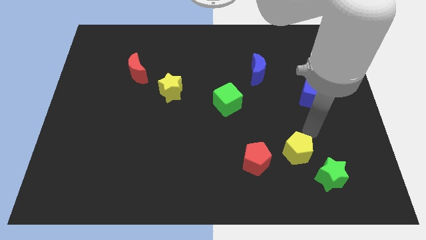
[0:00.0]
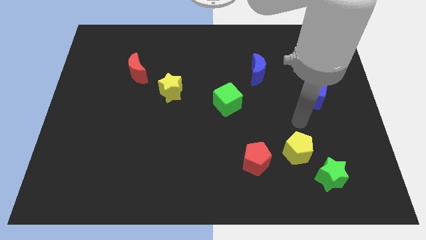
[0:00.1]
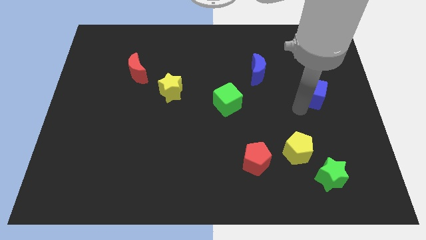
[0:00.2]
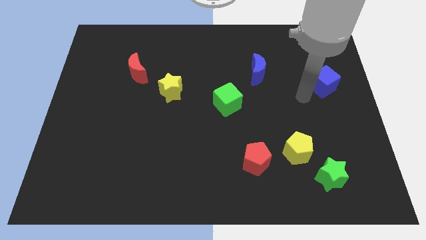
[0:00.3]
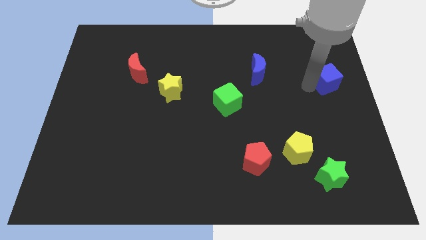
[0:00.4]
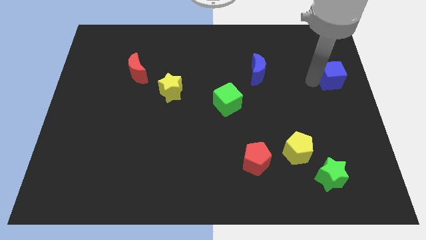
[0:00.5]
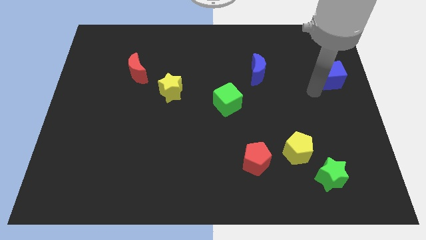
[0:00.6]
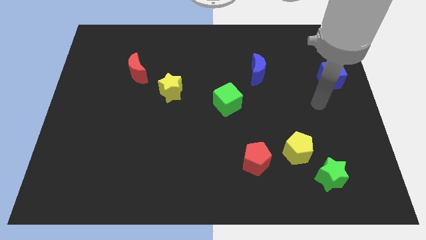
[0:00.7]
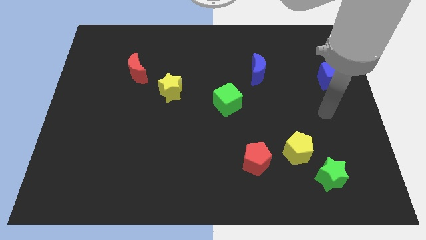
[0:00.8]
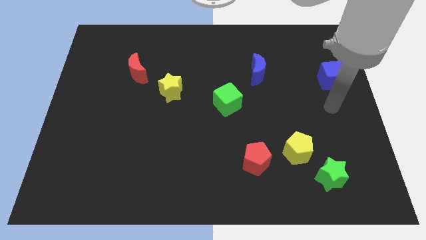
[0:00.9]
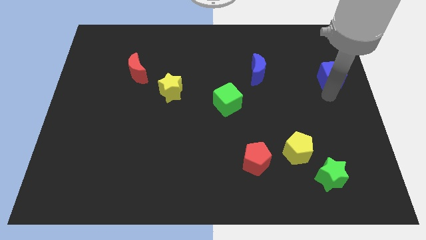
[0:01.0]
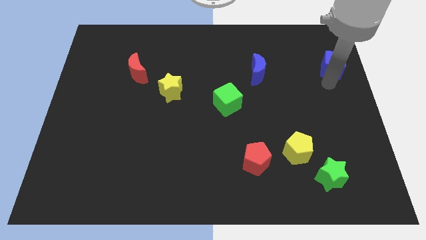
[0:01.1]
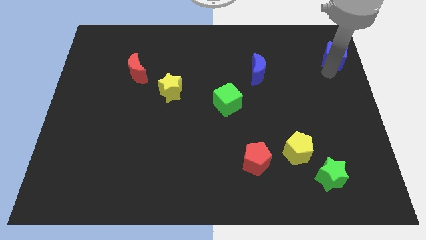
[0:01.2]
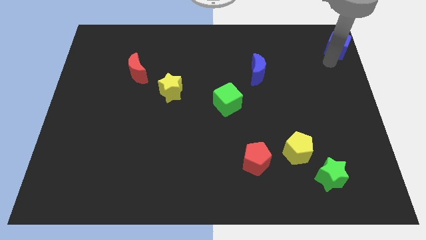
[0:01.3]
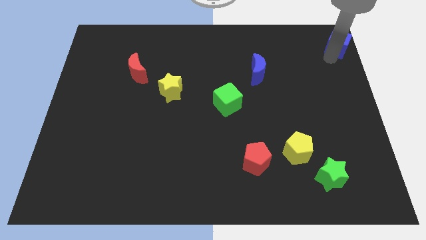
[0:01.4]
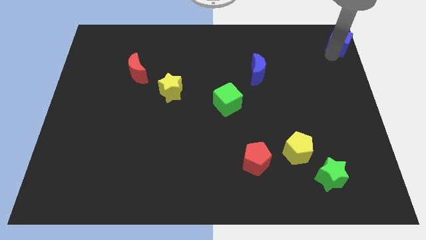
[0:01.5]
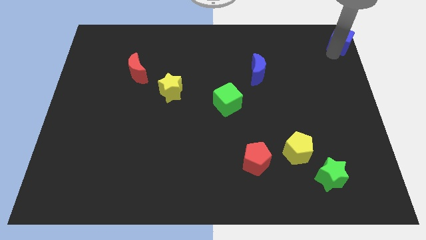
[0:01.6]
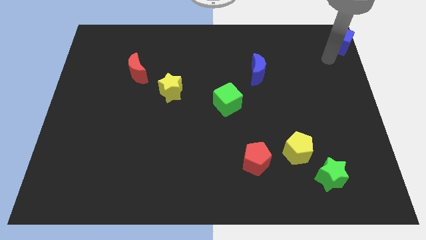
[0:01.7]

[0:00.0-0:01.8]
move the blue cube to the top right of the board

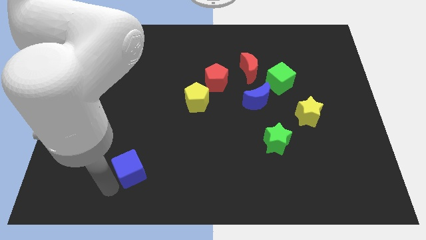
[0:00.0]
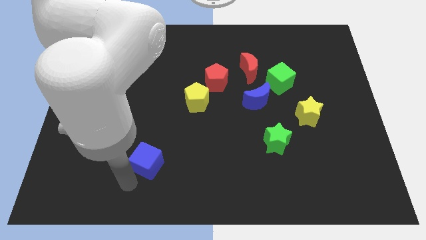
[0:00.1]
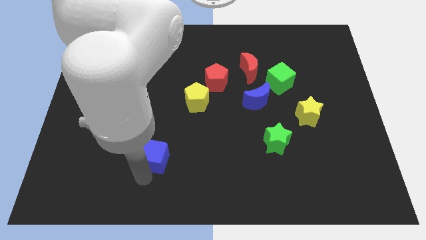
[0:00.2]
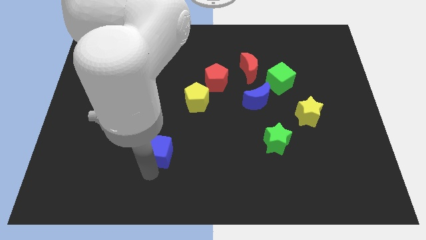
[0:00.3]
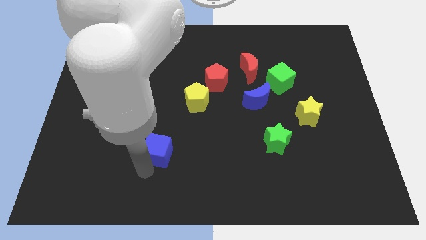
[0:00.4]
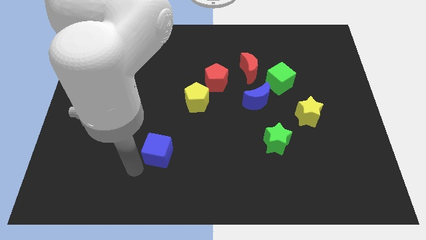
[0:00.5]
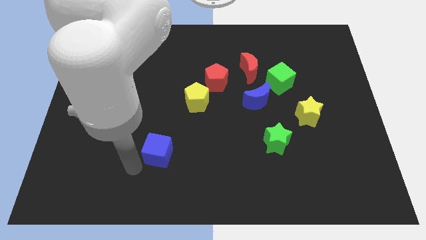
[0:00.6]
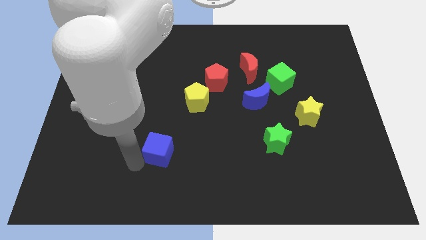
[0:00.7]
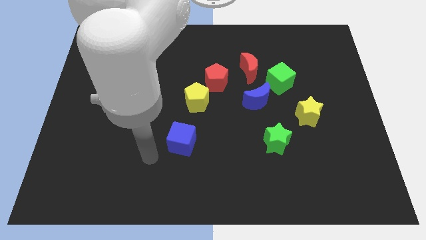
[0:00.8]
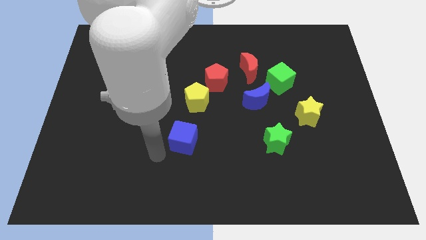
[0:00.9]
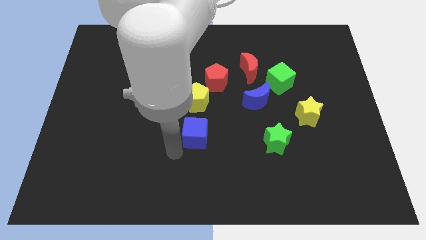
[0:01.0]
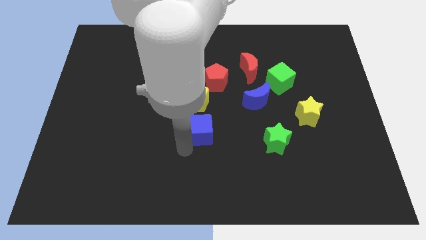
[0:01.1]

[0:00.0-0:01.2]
place the blue cube below the yellow pentagon

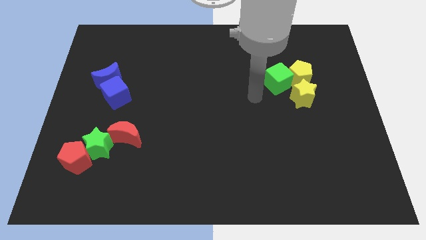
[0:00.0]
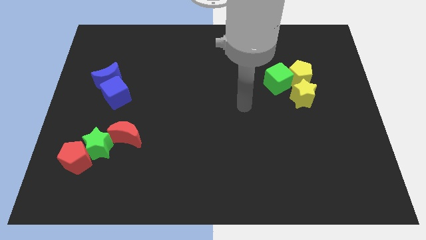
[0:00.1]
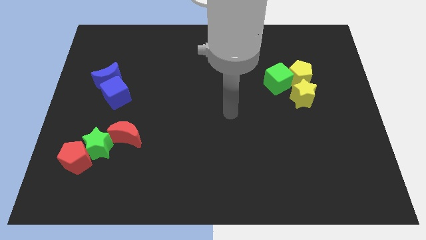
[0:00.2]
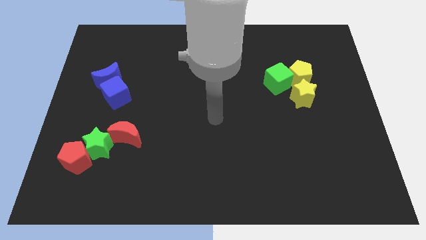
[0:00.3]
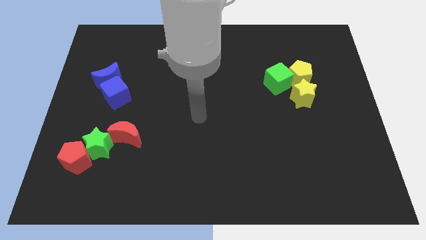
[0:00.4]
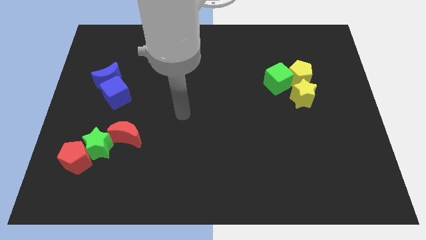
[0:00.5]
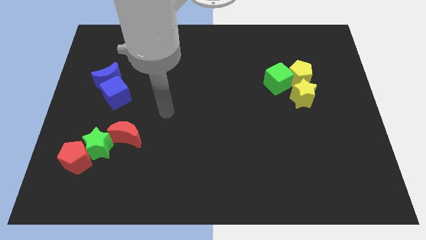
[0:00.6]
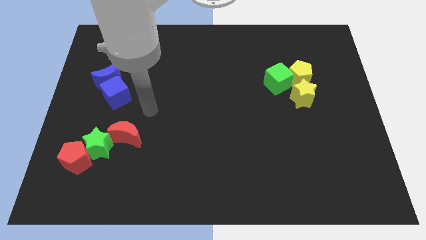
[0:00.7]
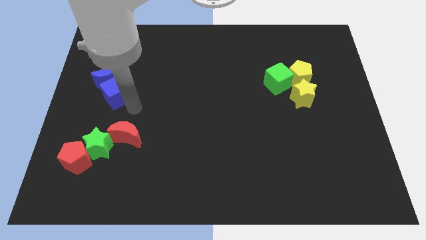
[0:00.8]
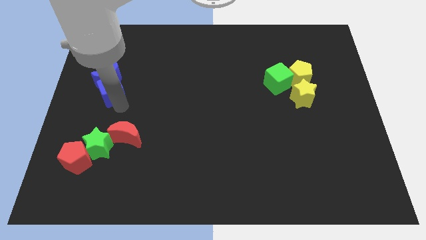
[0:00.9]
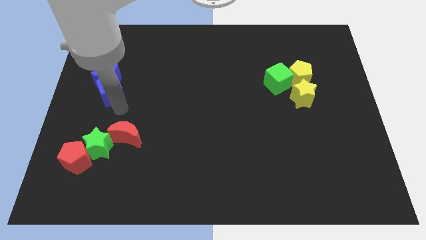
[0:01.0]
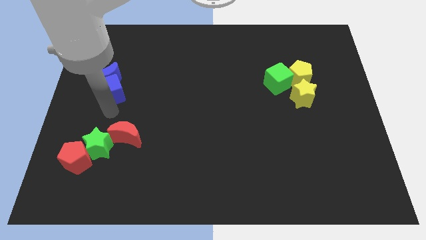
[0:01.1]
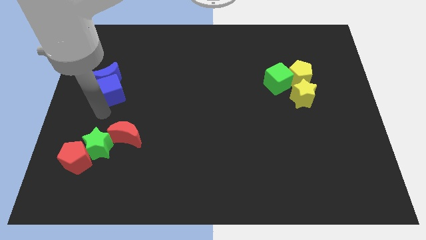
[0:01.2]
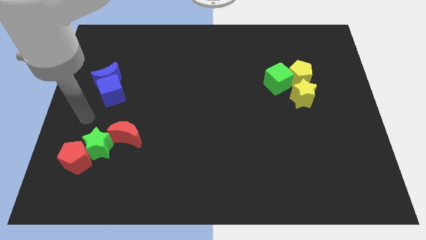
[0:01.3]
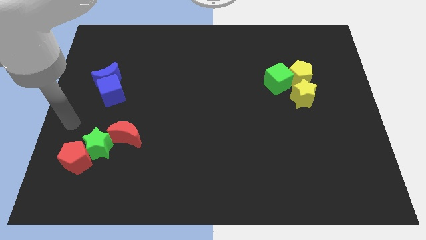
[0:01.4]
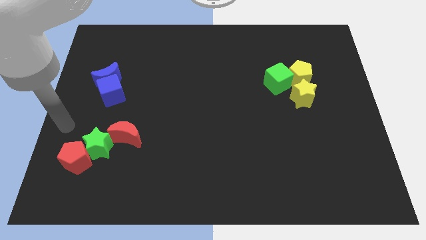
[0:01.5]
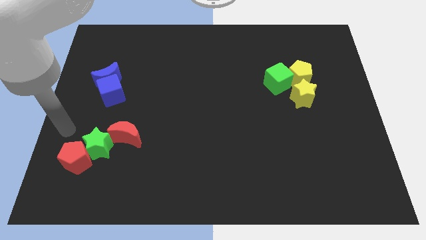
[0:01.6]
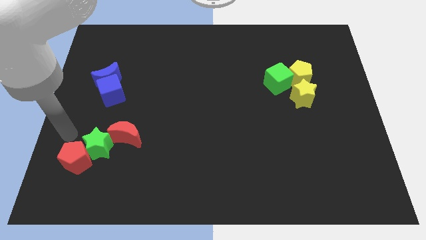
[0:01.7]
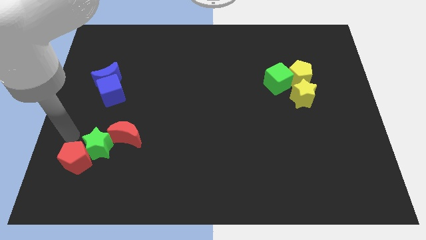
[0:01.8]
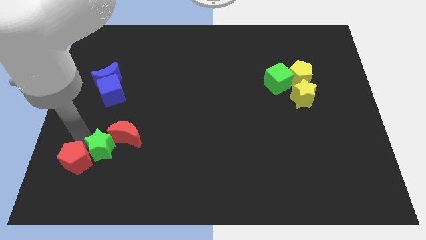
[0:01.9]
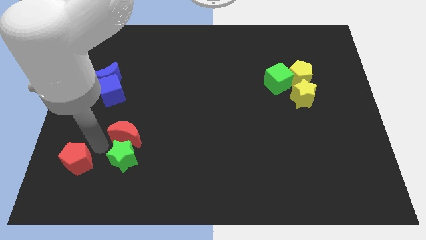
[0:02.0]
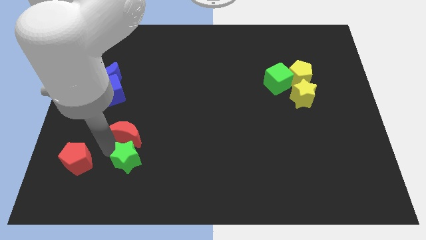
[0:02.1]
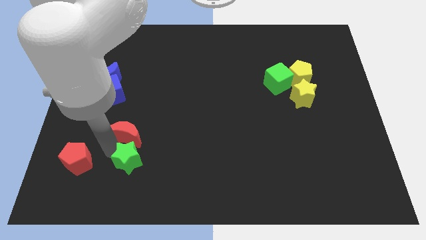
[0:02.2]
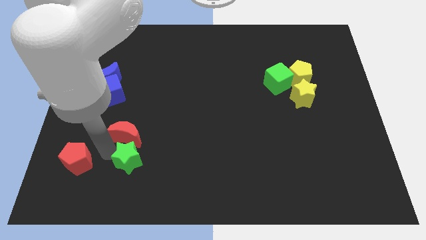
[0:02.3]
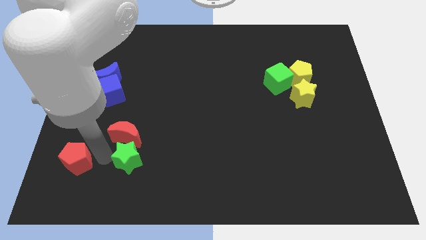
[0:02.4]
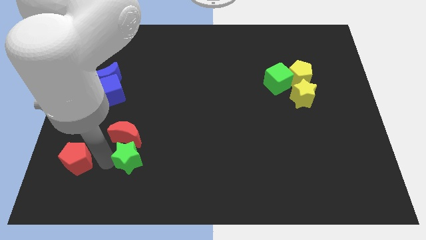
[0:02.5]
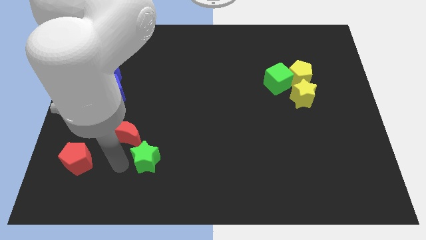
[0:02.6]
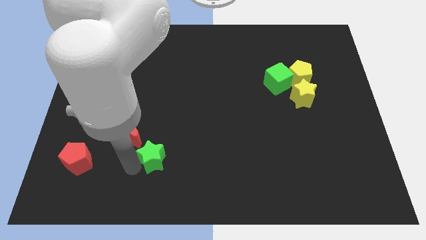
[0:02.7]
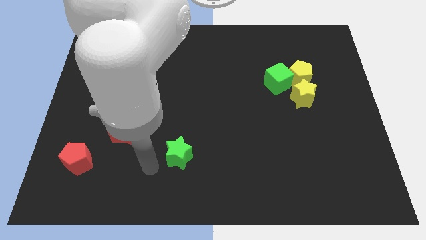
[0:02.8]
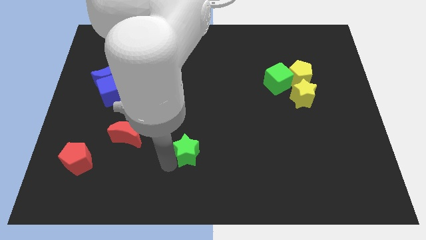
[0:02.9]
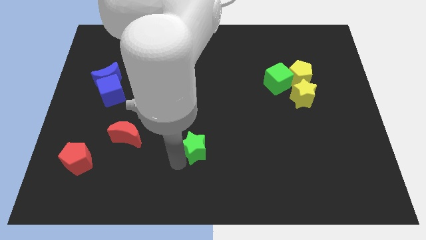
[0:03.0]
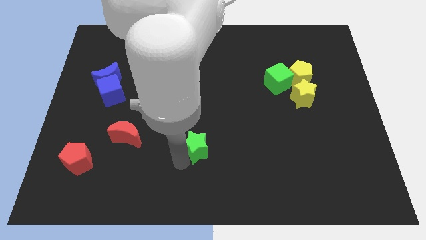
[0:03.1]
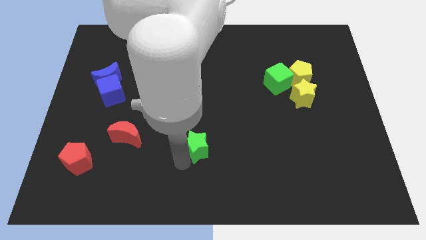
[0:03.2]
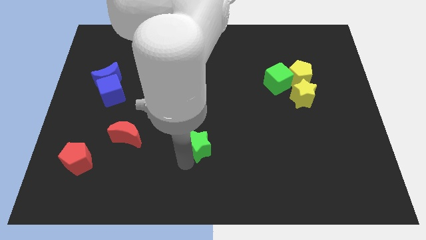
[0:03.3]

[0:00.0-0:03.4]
separate the green star from the red blocks

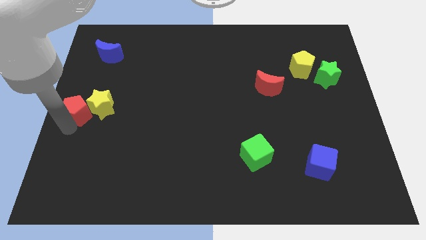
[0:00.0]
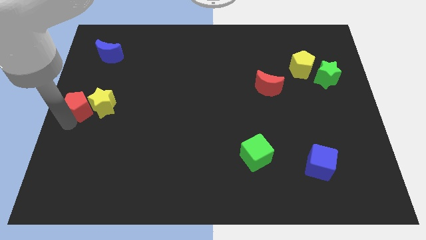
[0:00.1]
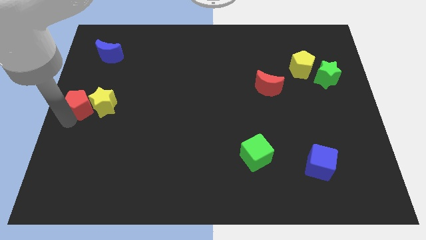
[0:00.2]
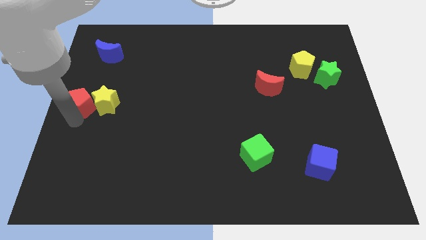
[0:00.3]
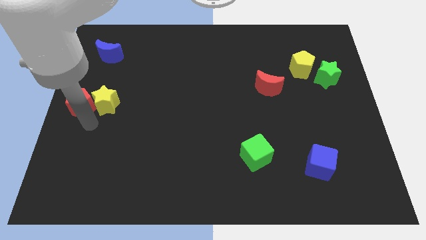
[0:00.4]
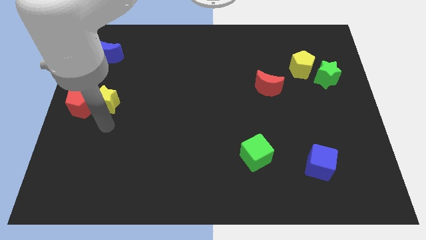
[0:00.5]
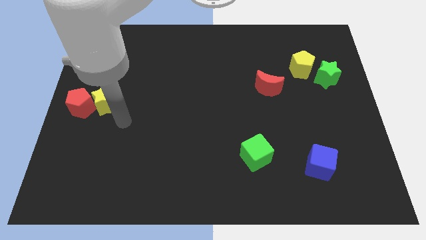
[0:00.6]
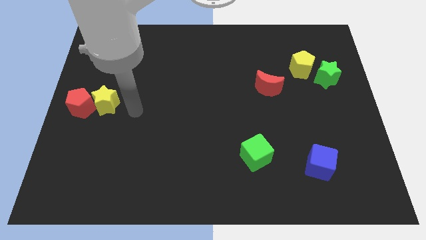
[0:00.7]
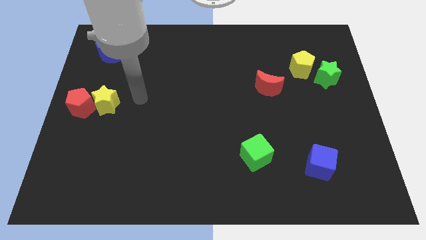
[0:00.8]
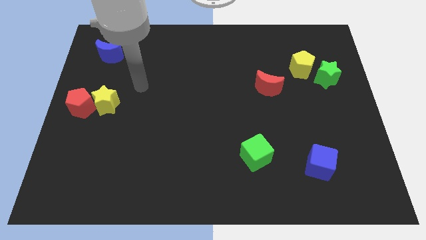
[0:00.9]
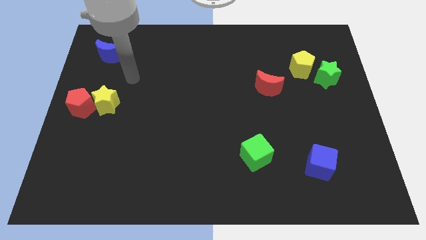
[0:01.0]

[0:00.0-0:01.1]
place the red pentagon to the left side of yellow star

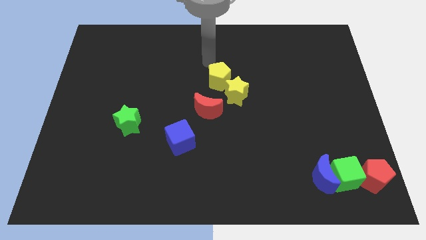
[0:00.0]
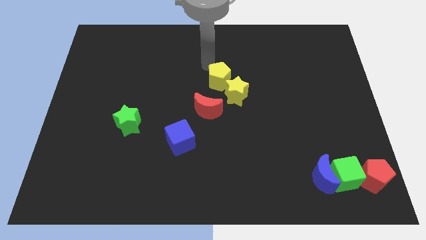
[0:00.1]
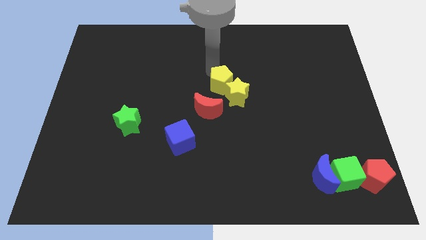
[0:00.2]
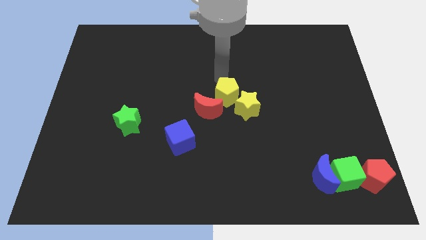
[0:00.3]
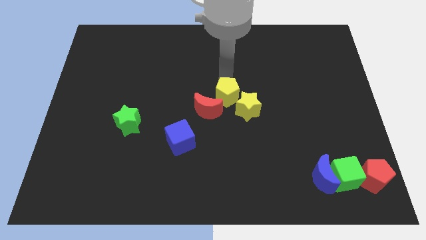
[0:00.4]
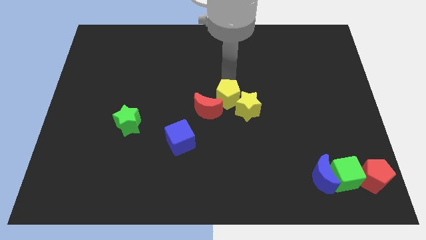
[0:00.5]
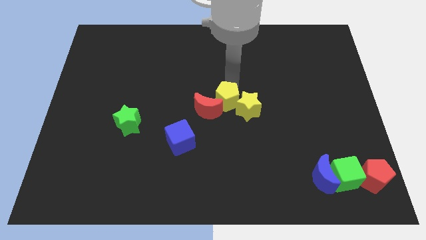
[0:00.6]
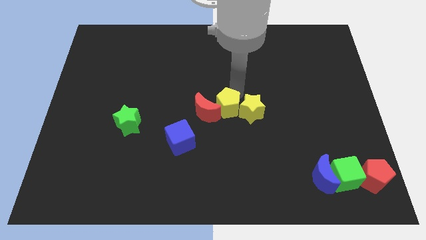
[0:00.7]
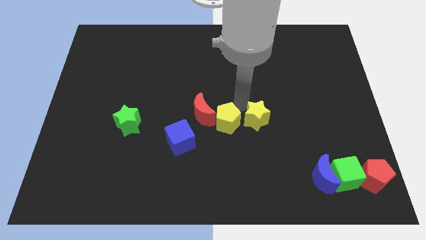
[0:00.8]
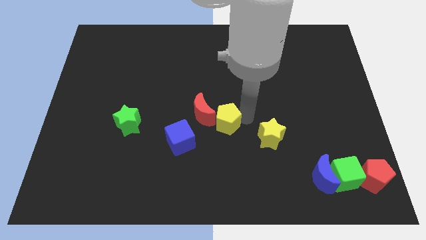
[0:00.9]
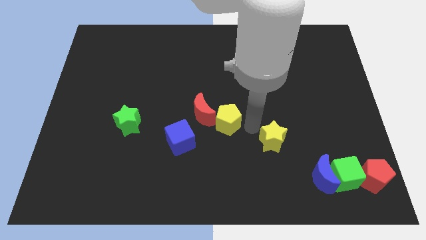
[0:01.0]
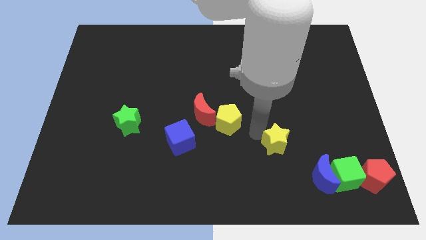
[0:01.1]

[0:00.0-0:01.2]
move the yellow blocks to bottom center

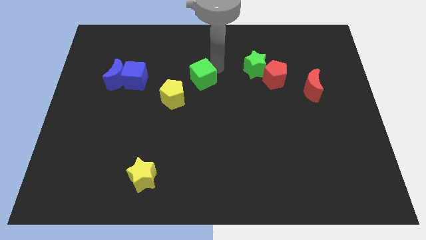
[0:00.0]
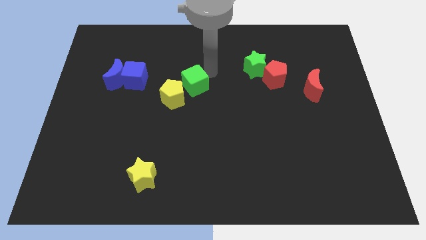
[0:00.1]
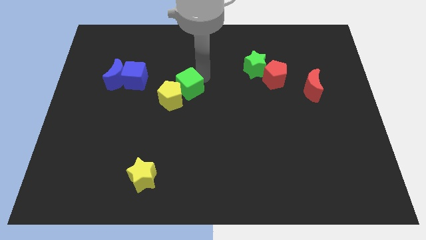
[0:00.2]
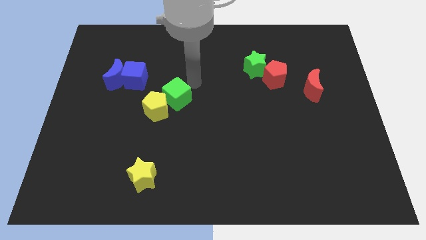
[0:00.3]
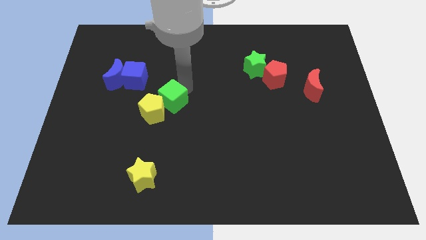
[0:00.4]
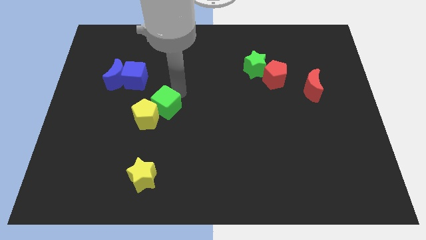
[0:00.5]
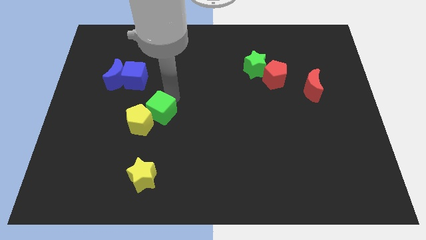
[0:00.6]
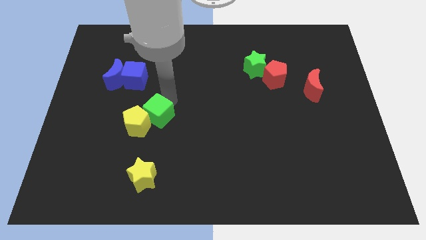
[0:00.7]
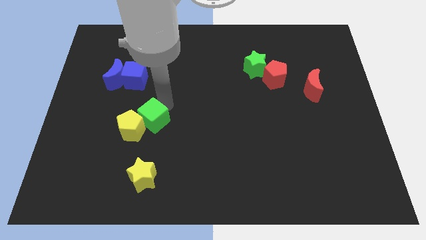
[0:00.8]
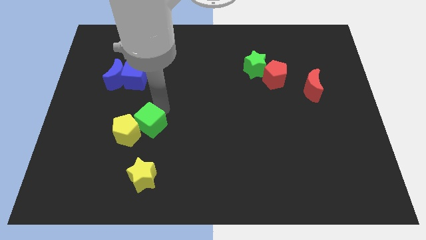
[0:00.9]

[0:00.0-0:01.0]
push green cube in to yellow pentagon
